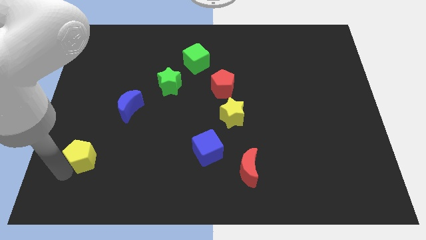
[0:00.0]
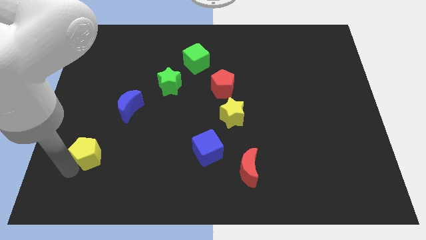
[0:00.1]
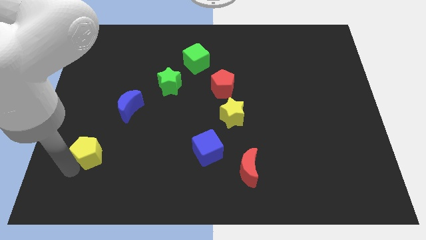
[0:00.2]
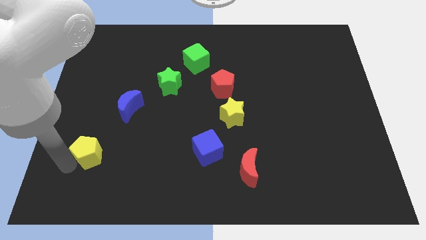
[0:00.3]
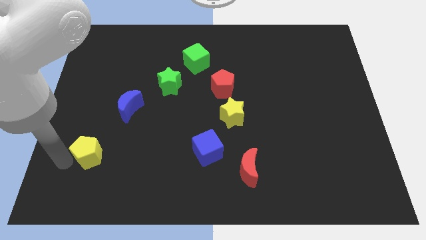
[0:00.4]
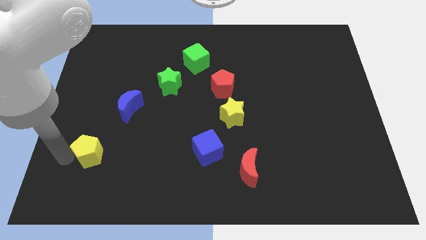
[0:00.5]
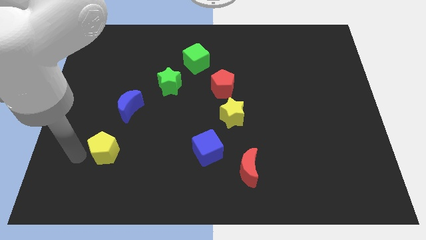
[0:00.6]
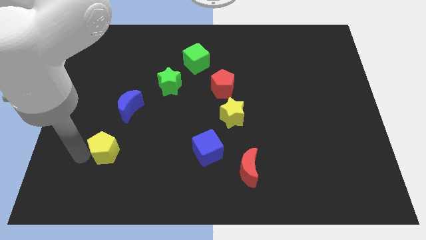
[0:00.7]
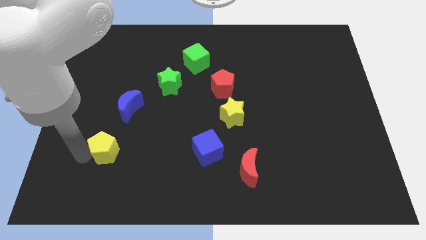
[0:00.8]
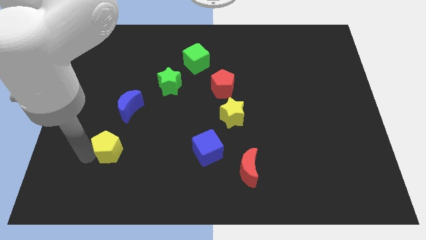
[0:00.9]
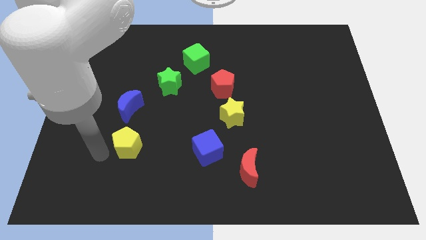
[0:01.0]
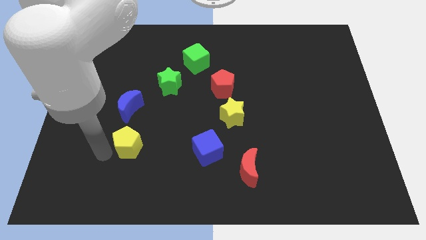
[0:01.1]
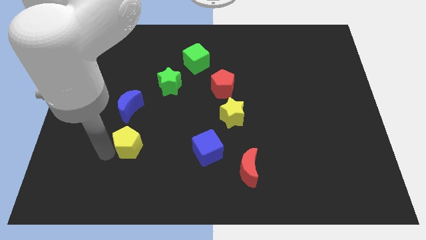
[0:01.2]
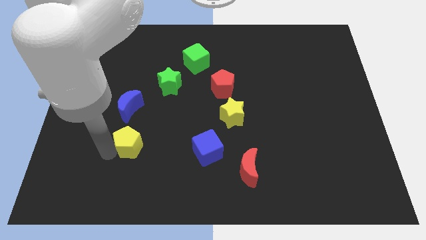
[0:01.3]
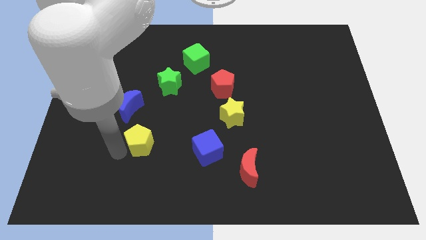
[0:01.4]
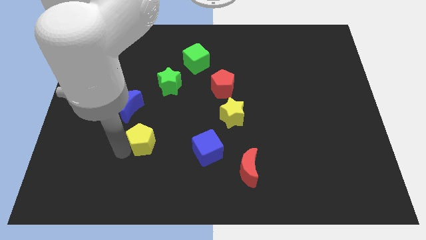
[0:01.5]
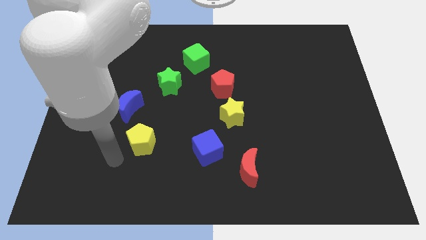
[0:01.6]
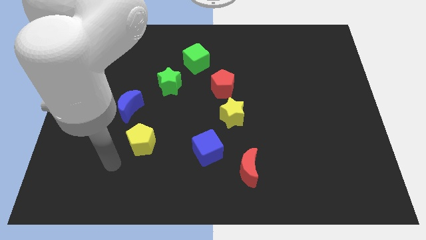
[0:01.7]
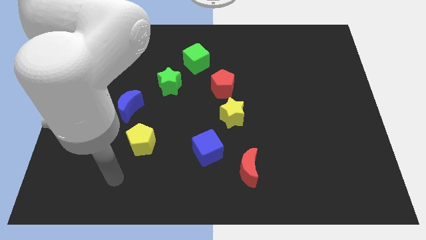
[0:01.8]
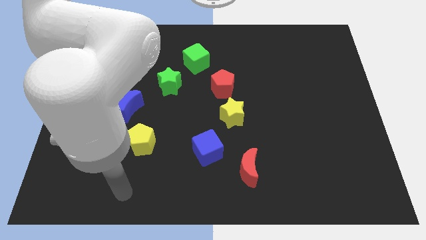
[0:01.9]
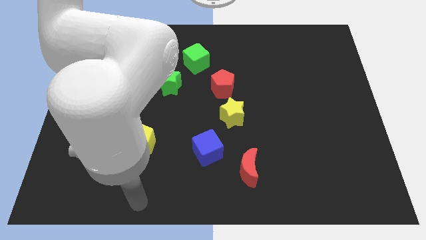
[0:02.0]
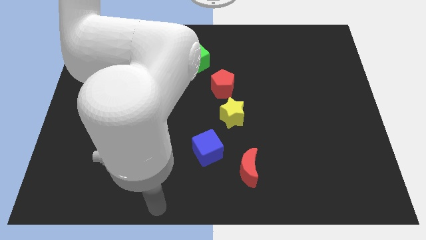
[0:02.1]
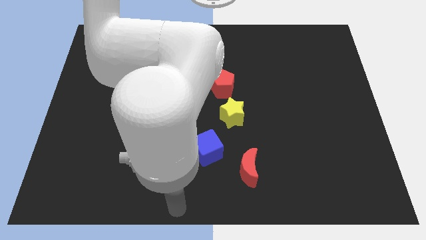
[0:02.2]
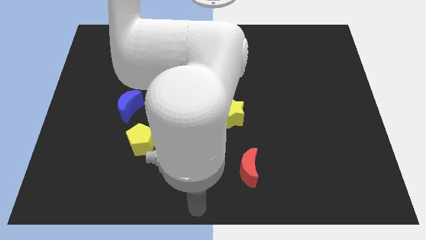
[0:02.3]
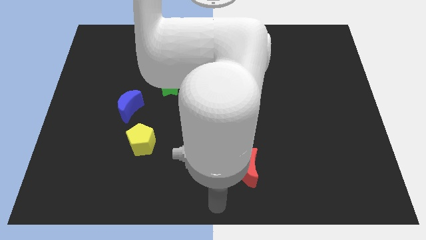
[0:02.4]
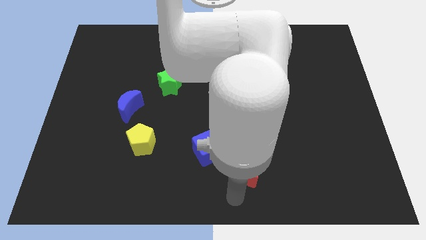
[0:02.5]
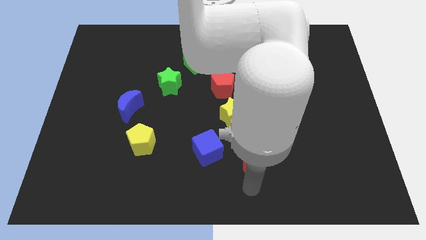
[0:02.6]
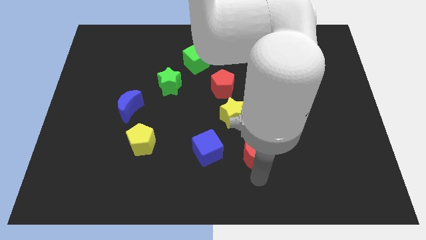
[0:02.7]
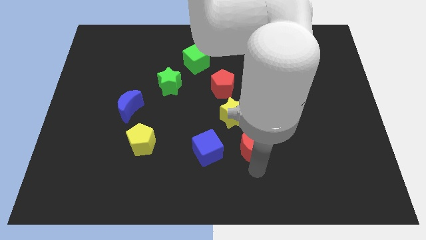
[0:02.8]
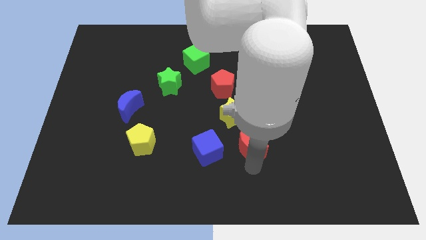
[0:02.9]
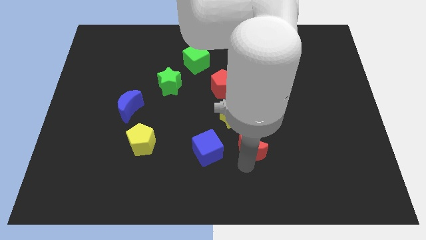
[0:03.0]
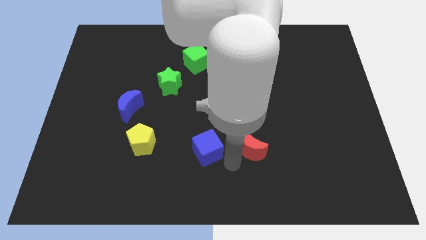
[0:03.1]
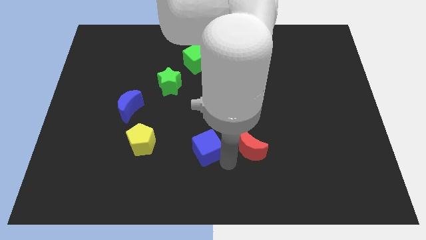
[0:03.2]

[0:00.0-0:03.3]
push red crescent towards red pentagon

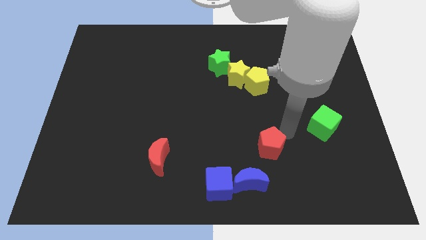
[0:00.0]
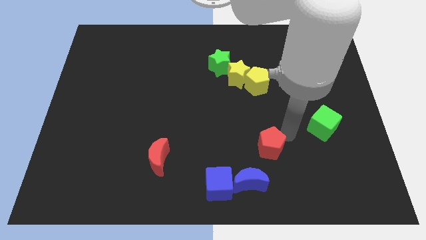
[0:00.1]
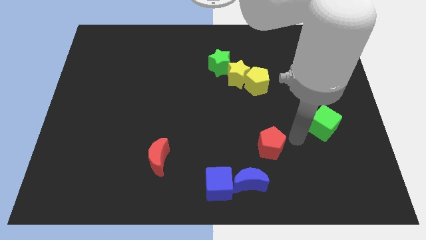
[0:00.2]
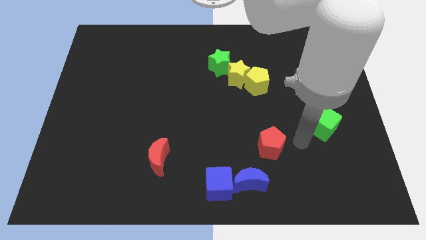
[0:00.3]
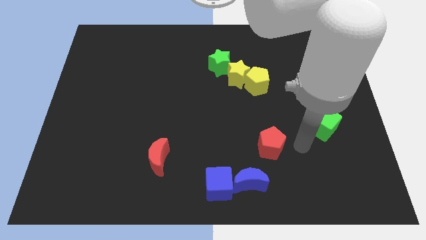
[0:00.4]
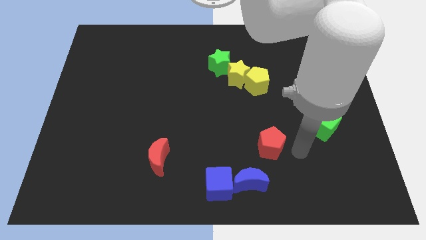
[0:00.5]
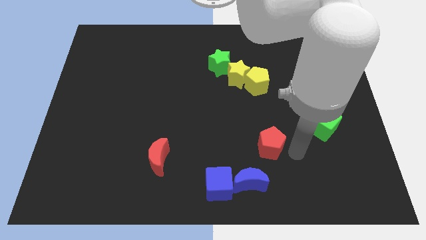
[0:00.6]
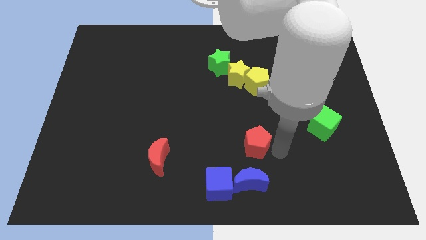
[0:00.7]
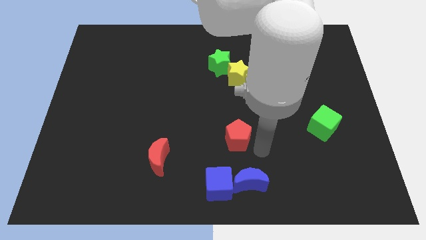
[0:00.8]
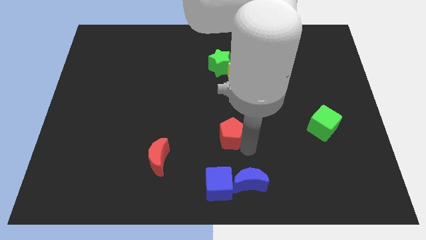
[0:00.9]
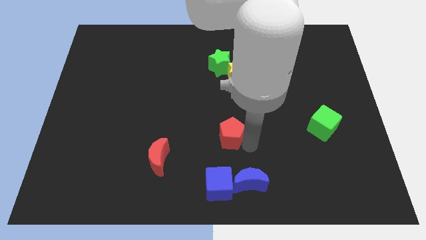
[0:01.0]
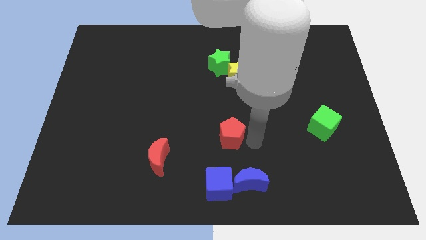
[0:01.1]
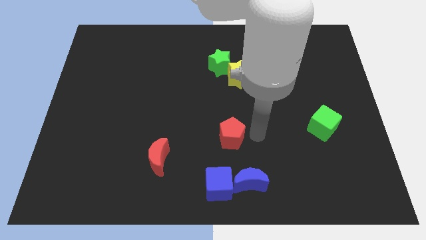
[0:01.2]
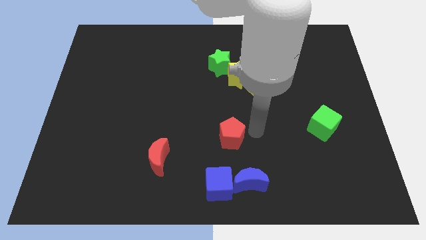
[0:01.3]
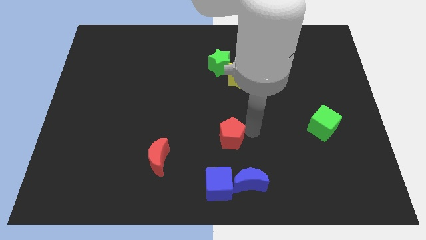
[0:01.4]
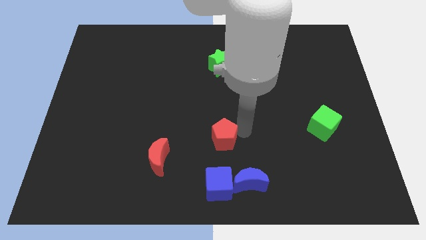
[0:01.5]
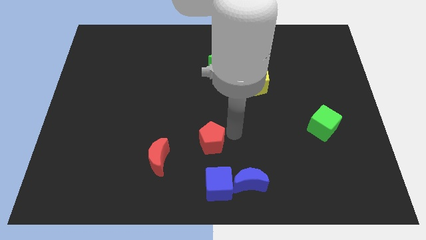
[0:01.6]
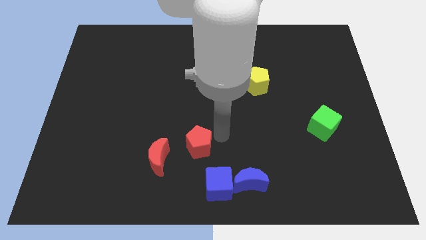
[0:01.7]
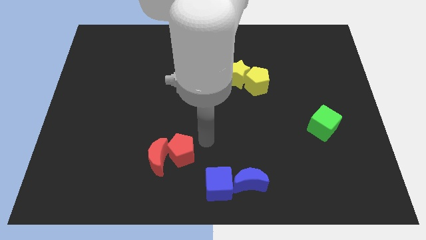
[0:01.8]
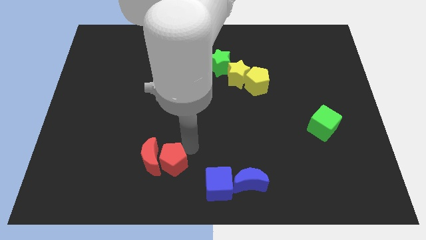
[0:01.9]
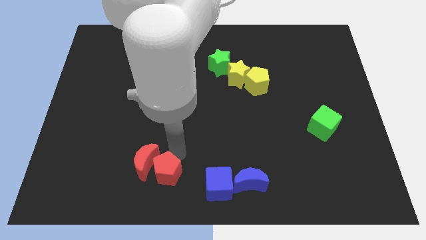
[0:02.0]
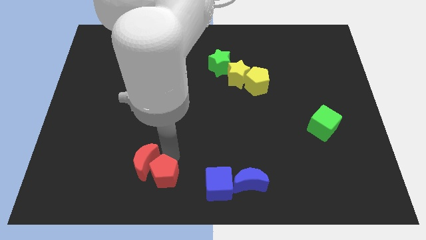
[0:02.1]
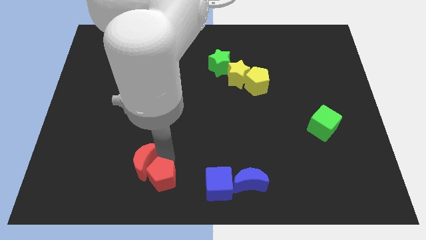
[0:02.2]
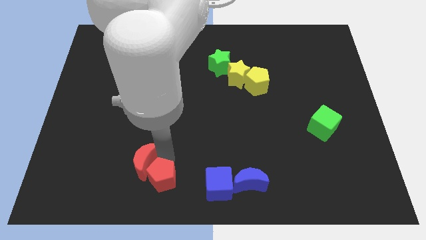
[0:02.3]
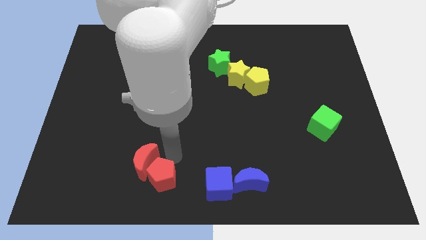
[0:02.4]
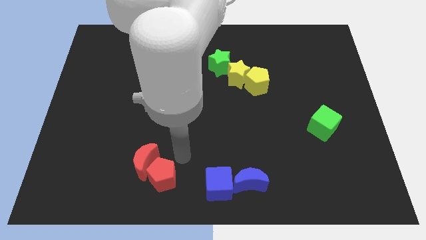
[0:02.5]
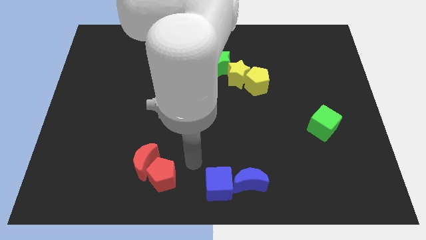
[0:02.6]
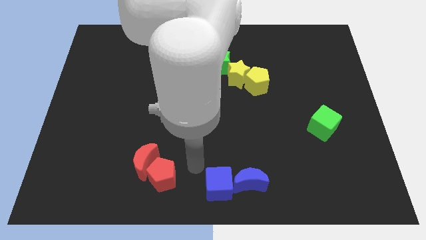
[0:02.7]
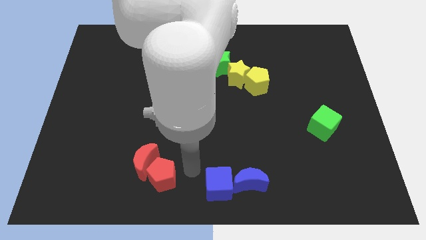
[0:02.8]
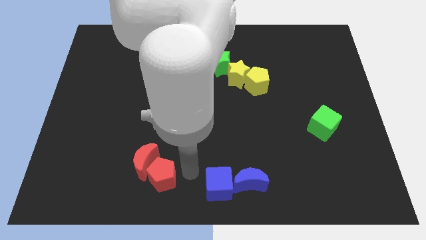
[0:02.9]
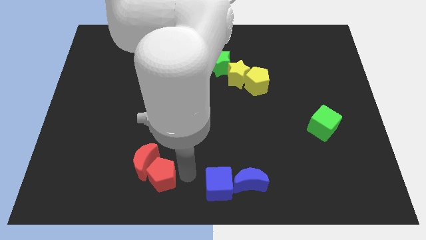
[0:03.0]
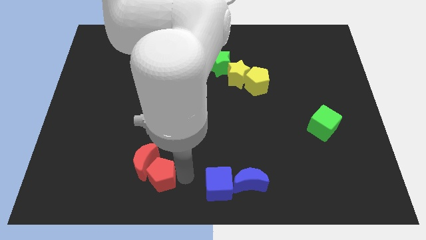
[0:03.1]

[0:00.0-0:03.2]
drag the red pentagon slightly downwards

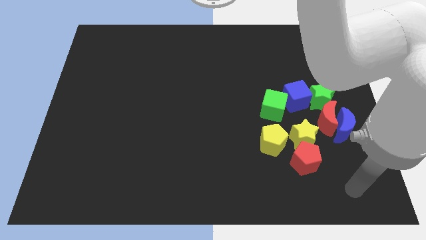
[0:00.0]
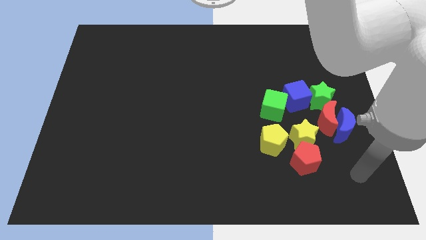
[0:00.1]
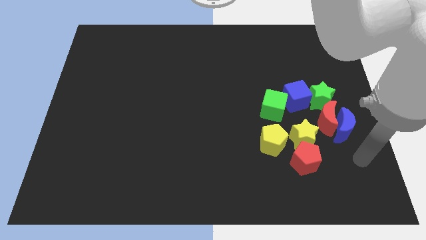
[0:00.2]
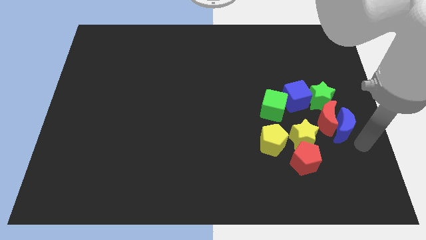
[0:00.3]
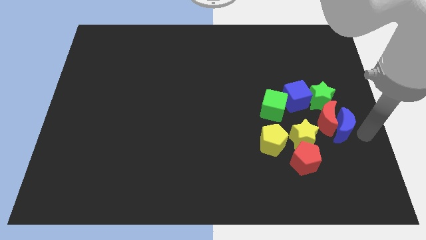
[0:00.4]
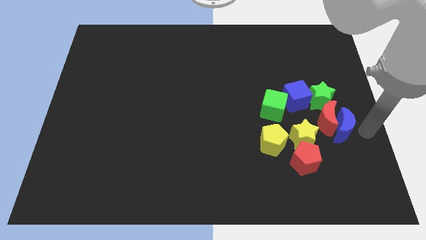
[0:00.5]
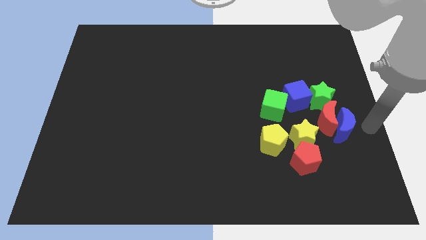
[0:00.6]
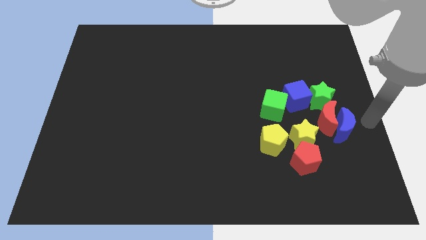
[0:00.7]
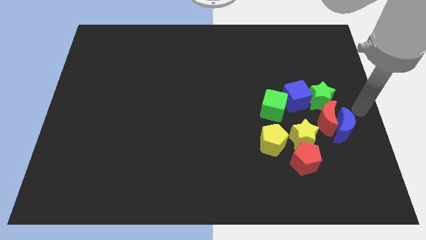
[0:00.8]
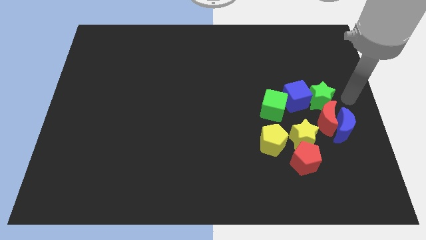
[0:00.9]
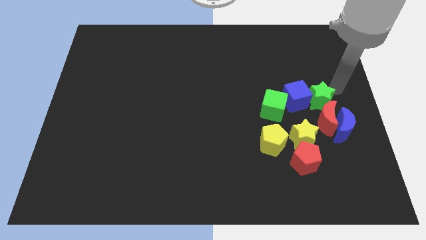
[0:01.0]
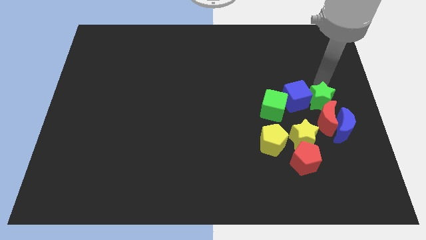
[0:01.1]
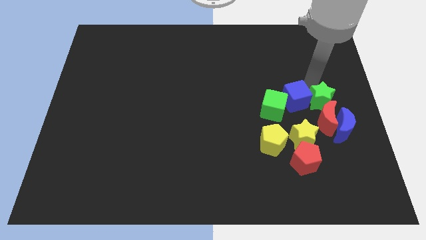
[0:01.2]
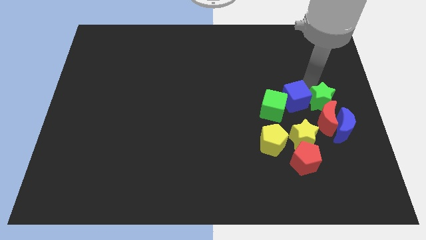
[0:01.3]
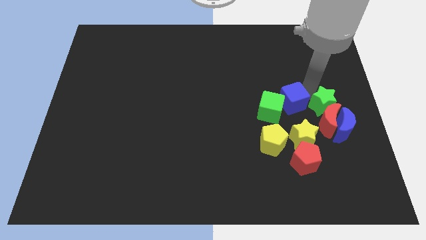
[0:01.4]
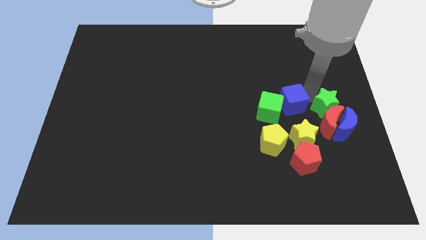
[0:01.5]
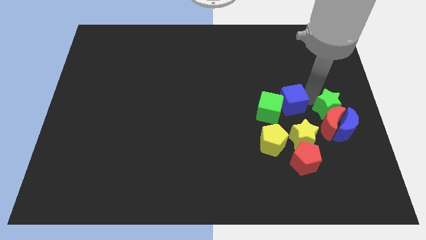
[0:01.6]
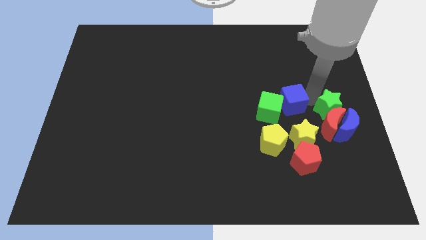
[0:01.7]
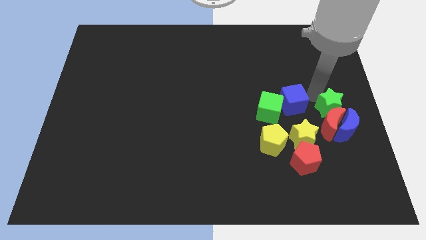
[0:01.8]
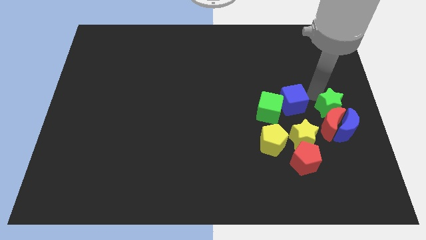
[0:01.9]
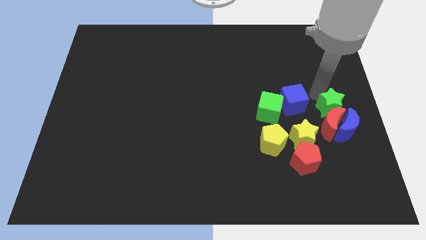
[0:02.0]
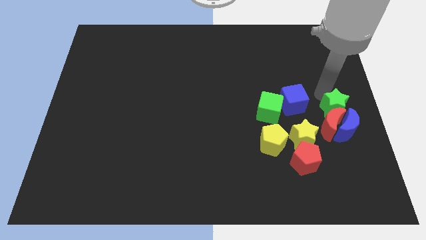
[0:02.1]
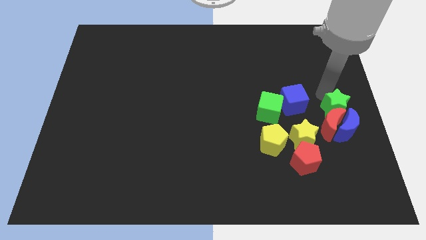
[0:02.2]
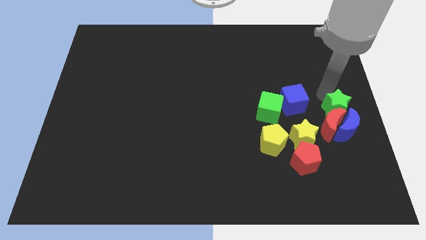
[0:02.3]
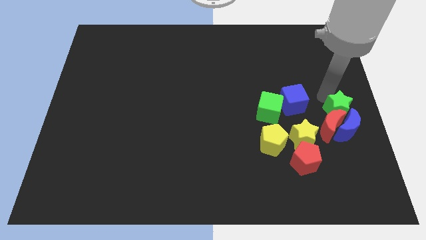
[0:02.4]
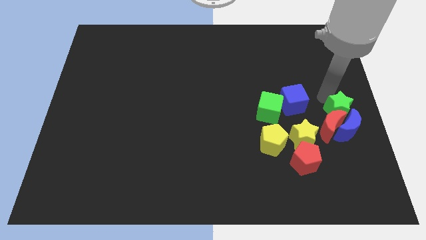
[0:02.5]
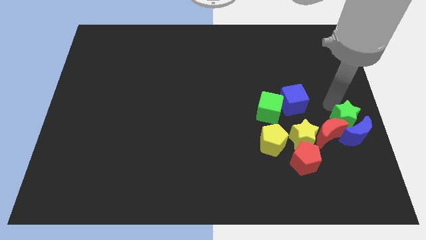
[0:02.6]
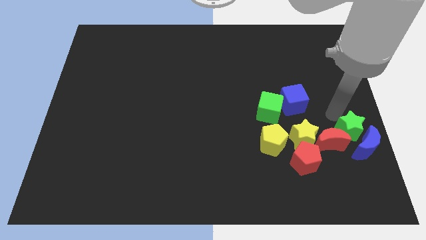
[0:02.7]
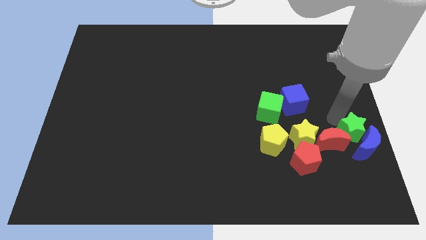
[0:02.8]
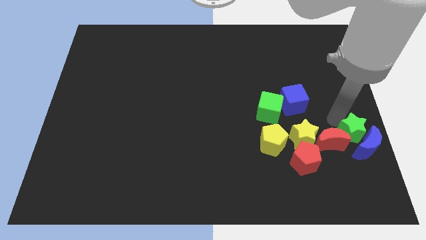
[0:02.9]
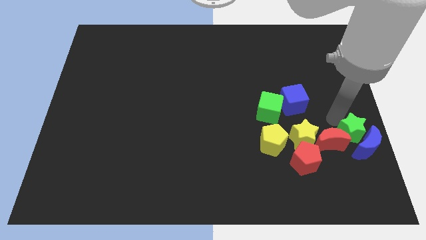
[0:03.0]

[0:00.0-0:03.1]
move green star towards blue moon
